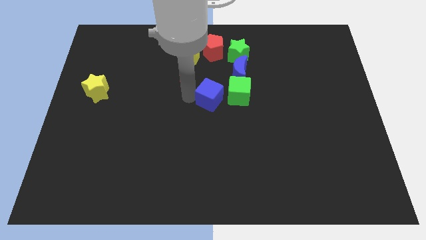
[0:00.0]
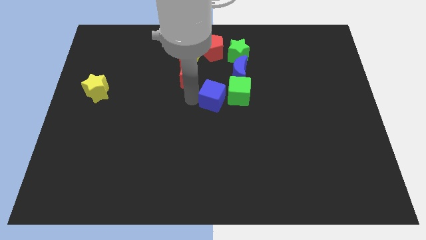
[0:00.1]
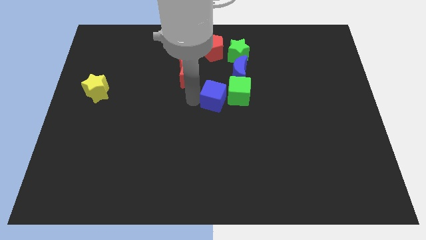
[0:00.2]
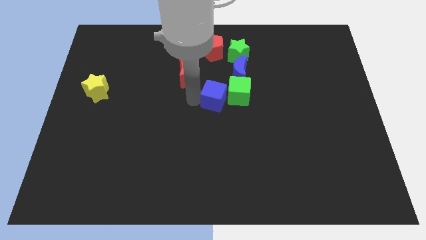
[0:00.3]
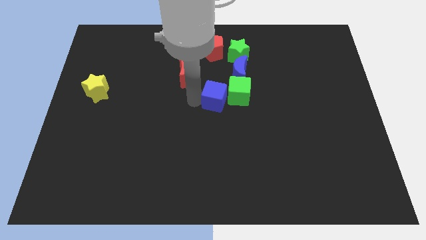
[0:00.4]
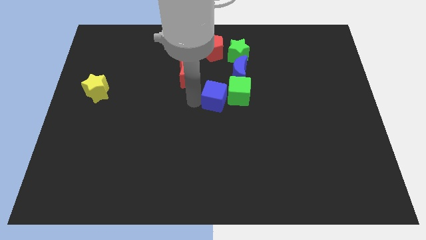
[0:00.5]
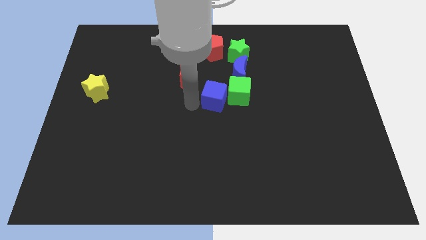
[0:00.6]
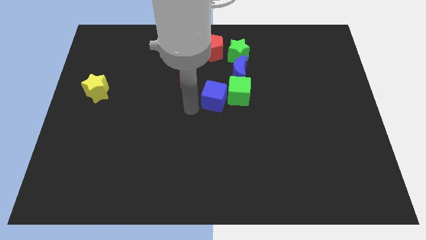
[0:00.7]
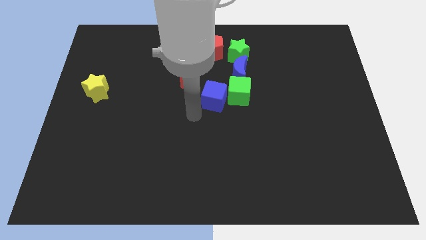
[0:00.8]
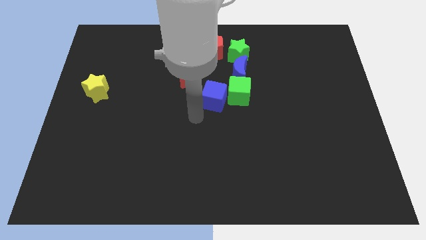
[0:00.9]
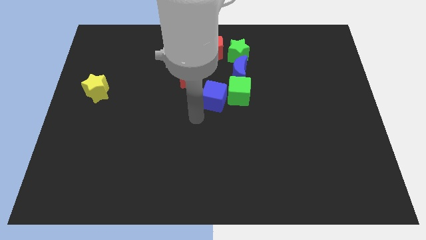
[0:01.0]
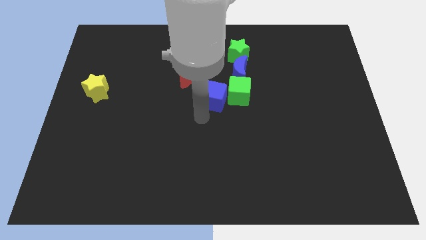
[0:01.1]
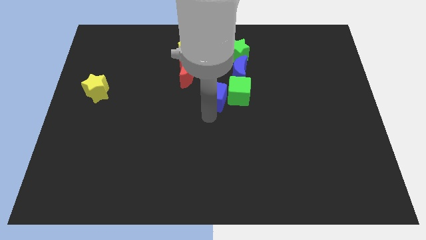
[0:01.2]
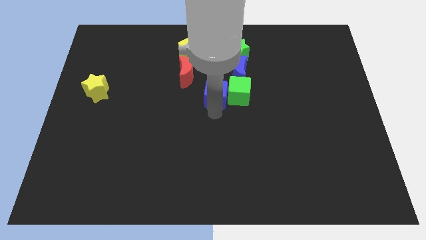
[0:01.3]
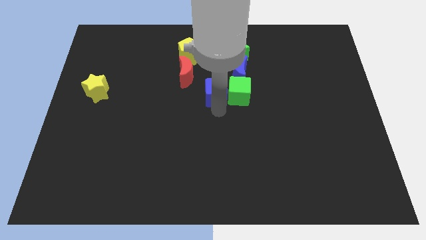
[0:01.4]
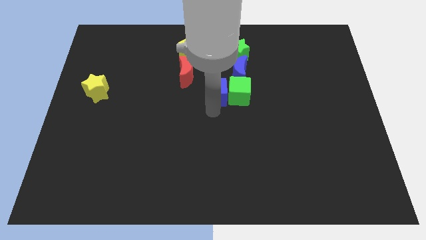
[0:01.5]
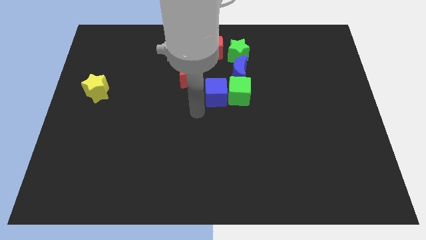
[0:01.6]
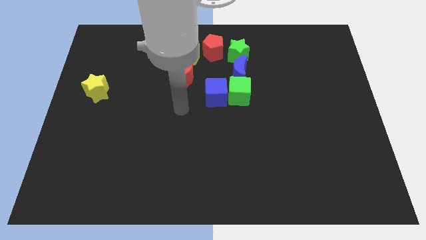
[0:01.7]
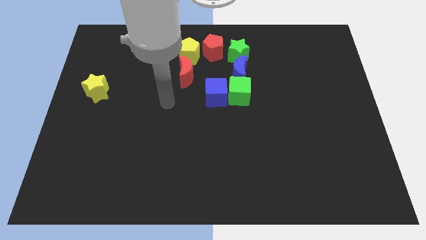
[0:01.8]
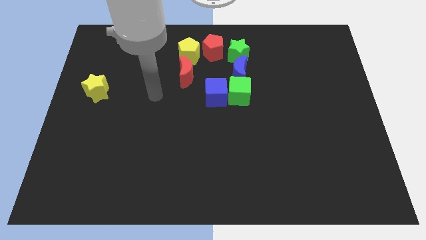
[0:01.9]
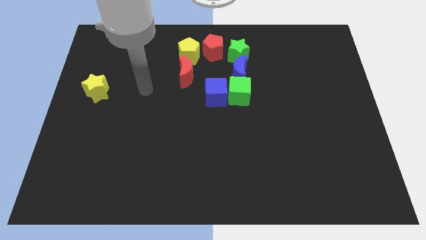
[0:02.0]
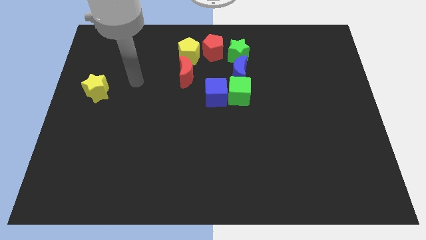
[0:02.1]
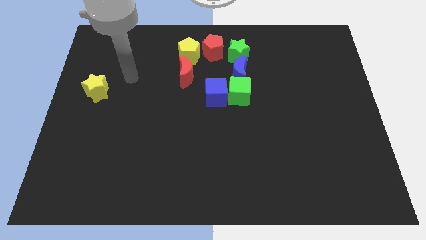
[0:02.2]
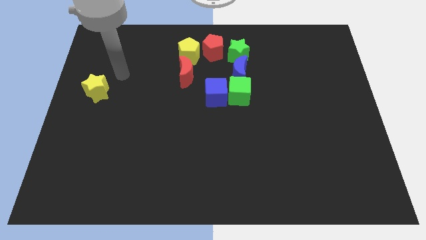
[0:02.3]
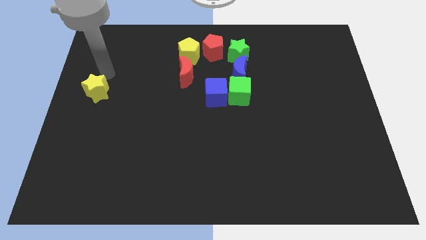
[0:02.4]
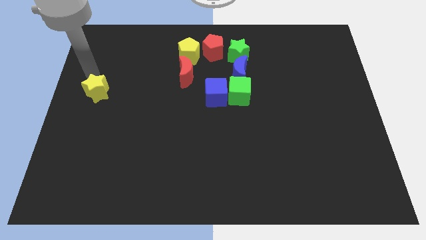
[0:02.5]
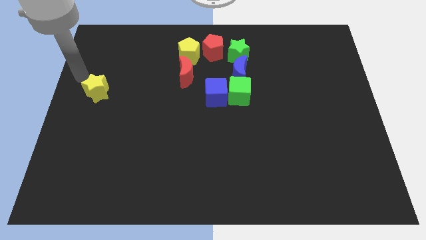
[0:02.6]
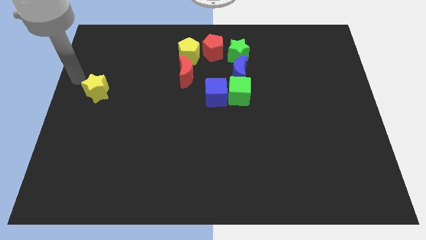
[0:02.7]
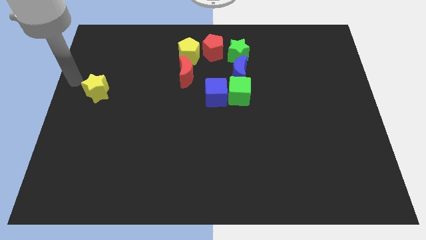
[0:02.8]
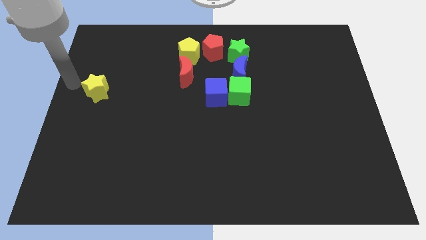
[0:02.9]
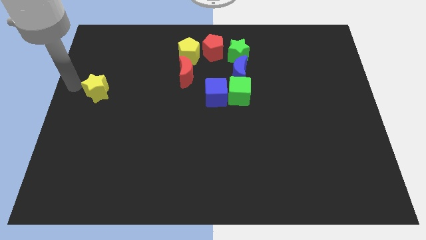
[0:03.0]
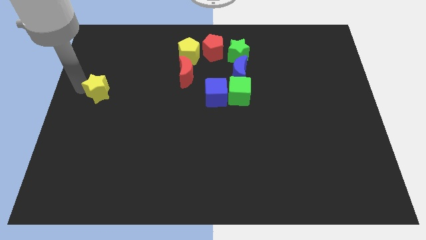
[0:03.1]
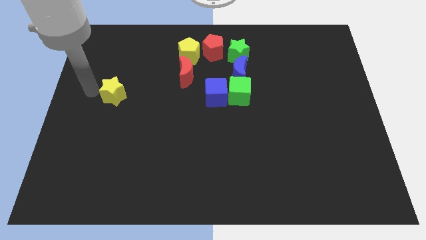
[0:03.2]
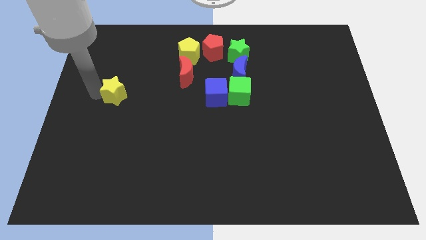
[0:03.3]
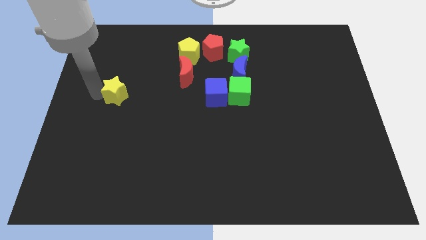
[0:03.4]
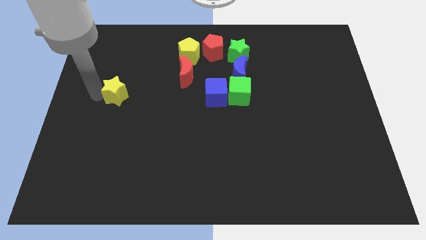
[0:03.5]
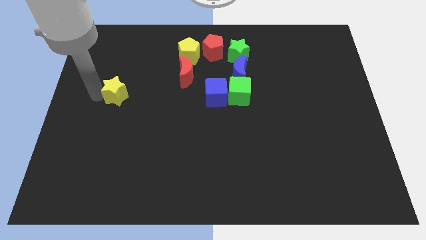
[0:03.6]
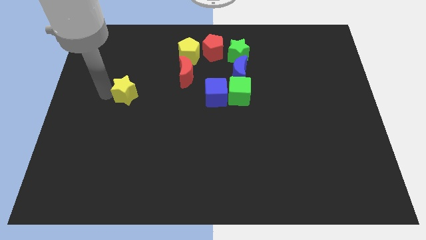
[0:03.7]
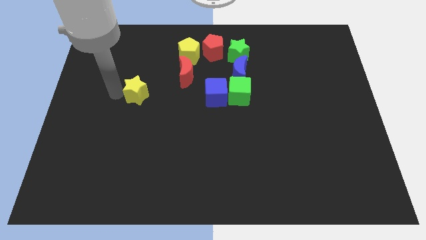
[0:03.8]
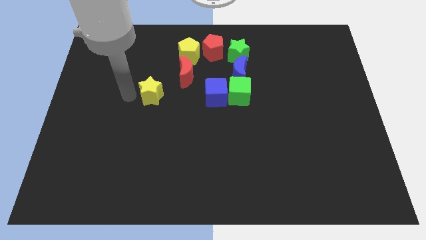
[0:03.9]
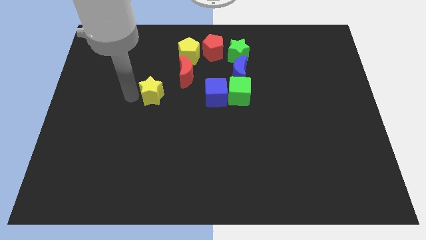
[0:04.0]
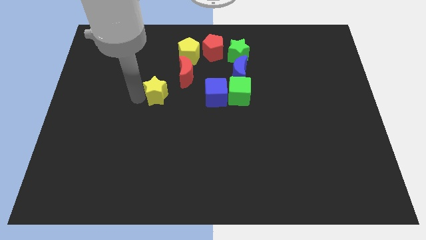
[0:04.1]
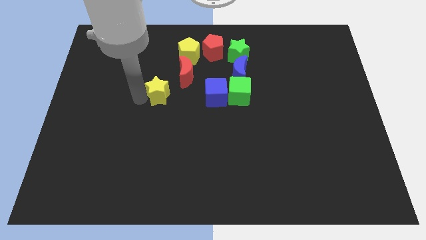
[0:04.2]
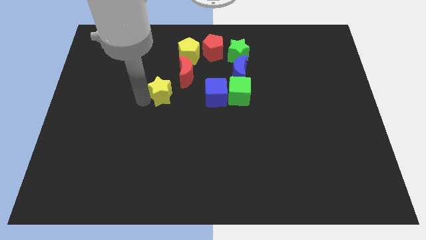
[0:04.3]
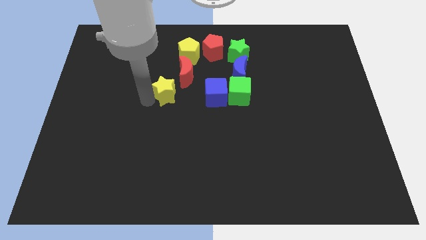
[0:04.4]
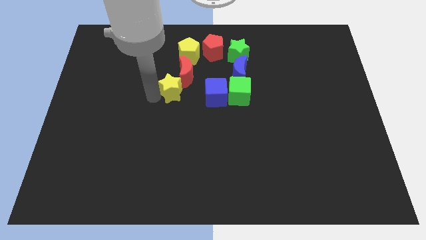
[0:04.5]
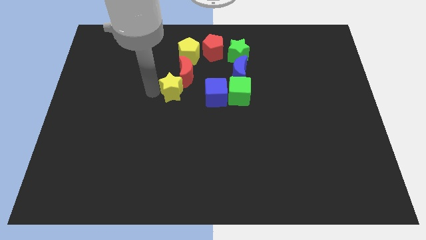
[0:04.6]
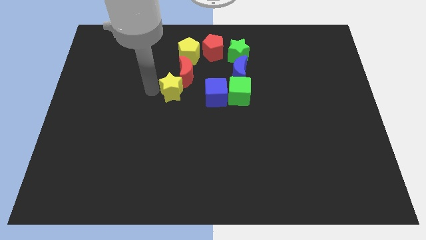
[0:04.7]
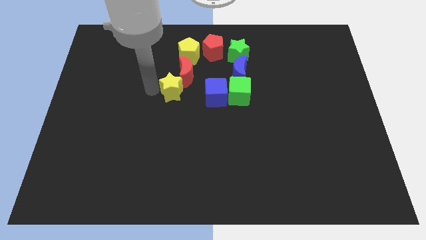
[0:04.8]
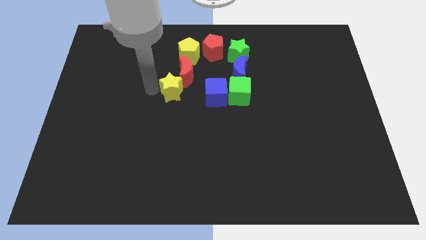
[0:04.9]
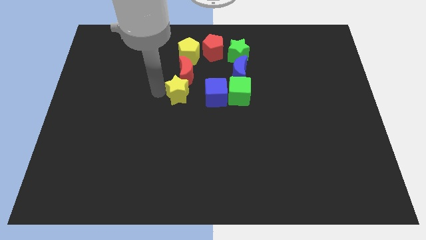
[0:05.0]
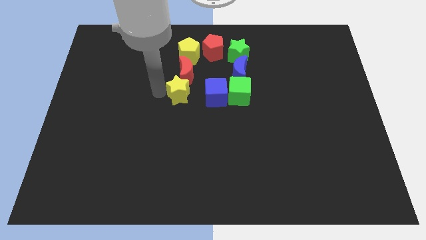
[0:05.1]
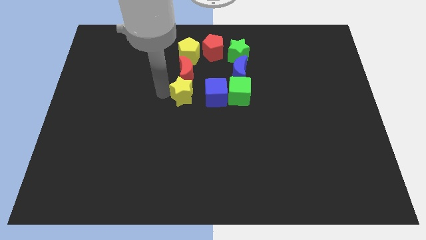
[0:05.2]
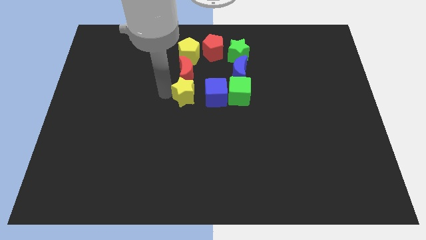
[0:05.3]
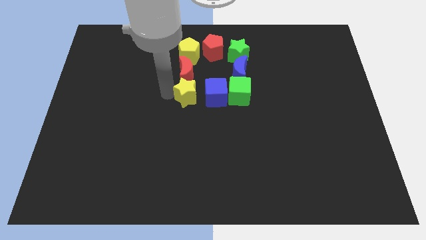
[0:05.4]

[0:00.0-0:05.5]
push the yellow star towards the blue cube

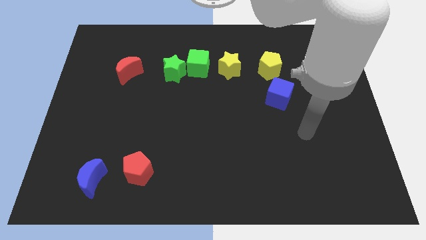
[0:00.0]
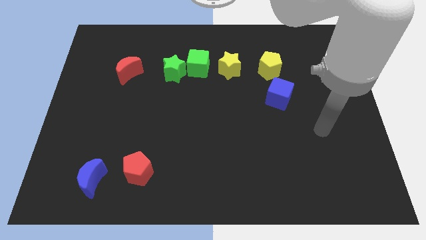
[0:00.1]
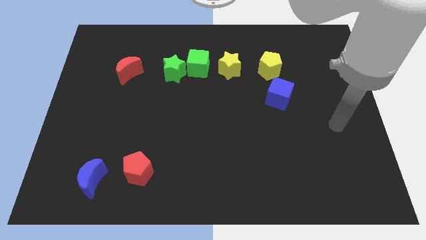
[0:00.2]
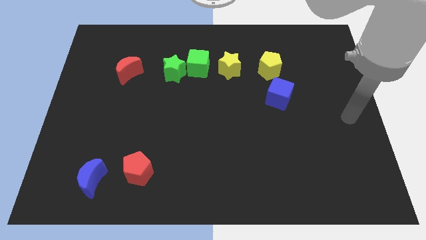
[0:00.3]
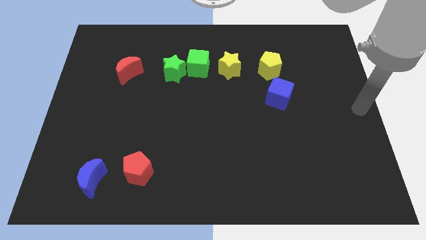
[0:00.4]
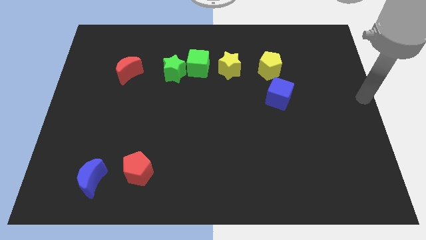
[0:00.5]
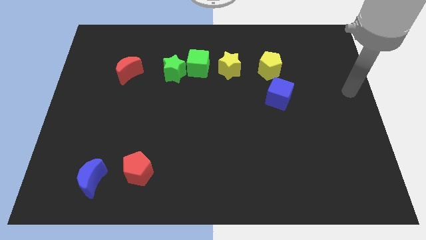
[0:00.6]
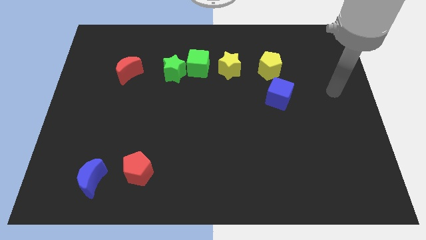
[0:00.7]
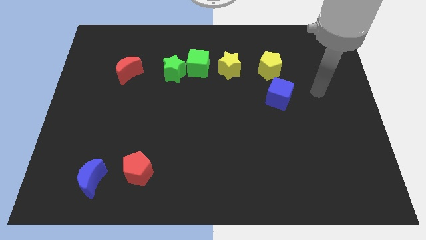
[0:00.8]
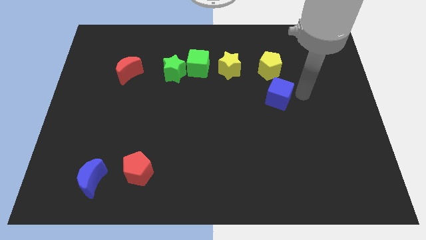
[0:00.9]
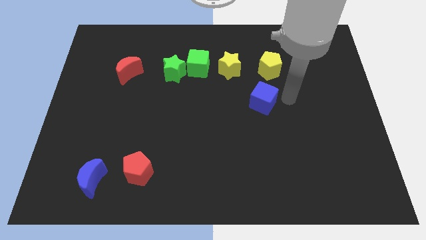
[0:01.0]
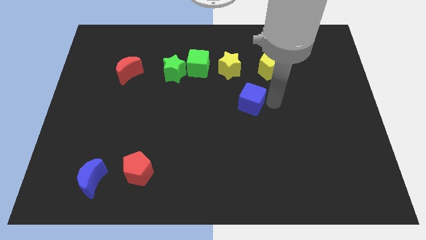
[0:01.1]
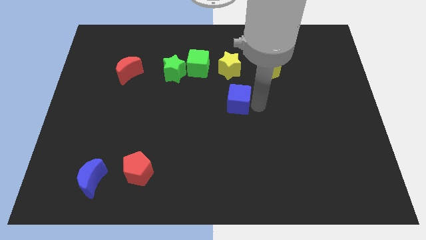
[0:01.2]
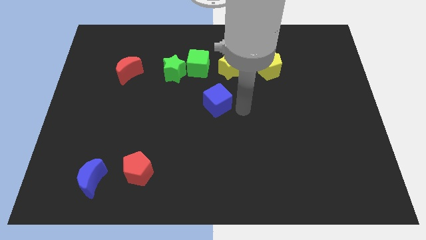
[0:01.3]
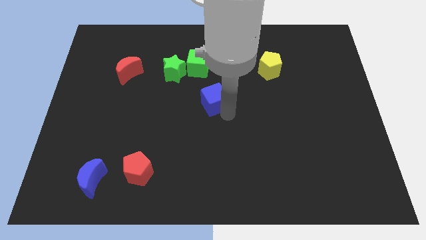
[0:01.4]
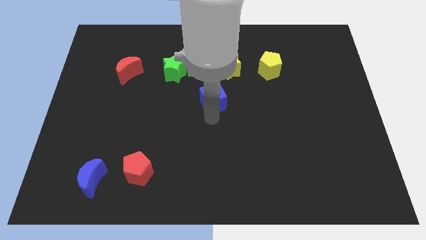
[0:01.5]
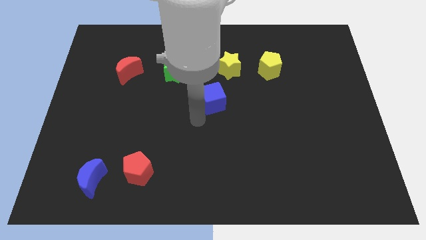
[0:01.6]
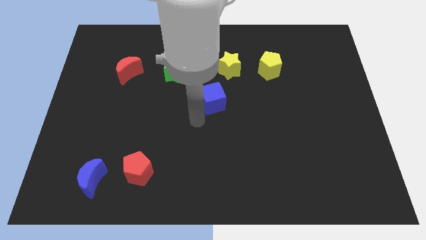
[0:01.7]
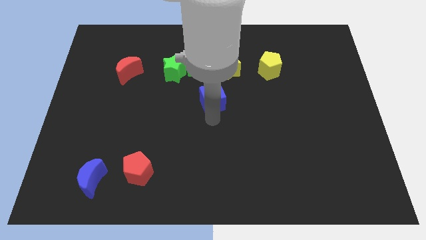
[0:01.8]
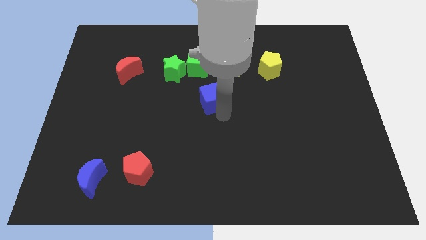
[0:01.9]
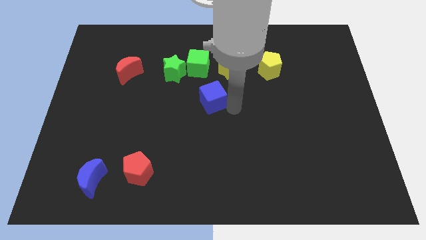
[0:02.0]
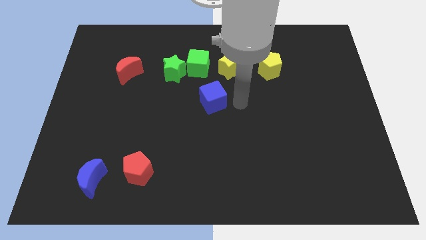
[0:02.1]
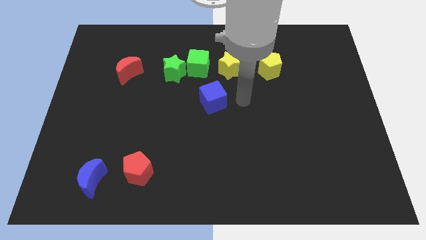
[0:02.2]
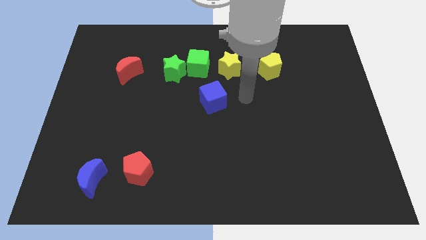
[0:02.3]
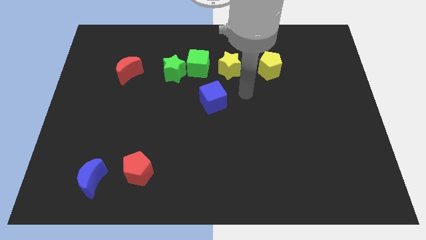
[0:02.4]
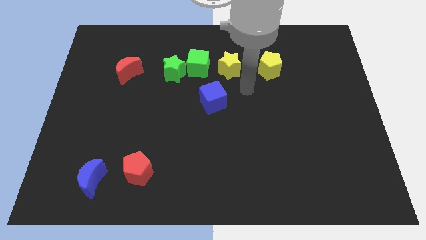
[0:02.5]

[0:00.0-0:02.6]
slide blue cube to center

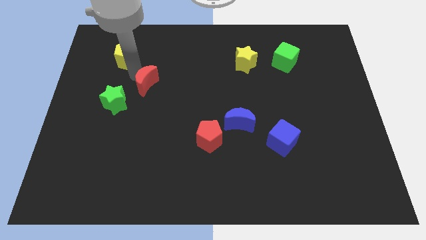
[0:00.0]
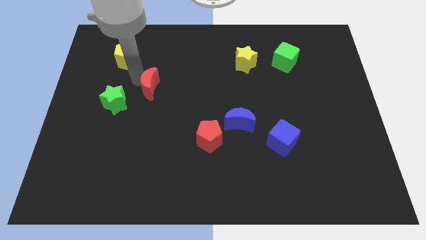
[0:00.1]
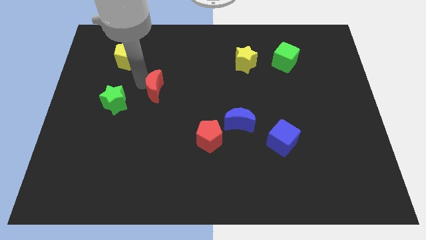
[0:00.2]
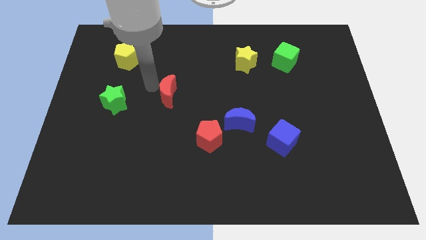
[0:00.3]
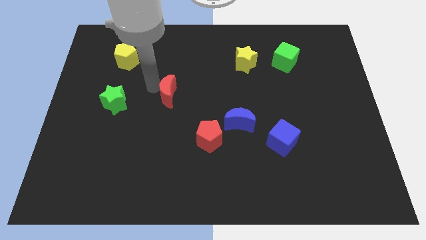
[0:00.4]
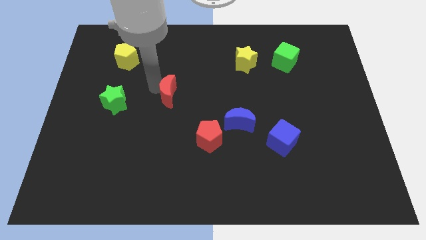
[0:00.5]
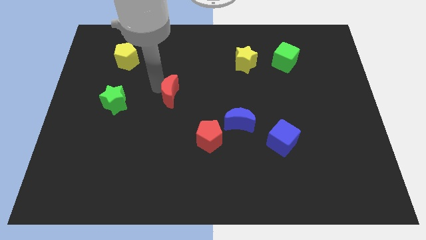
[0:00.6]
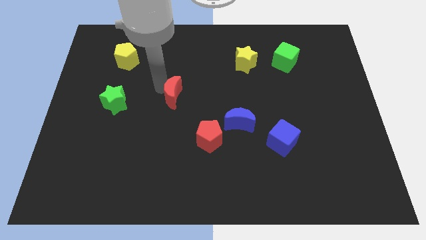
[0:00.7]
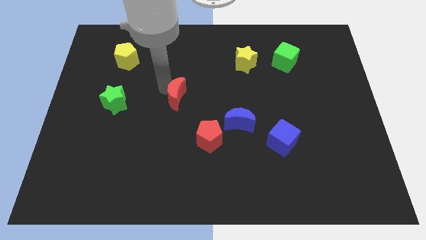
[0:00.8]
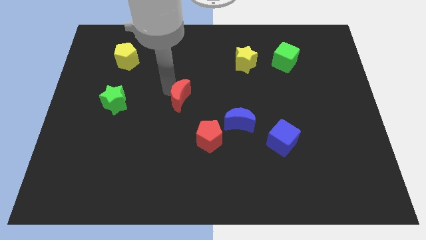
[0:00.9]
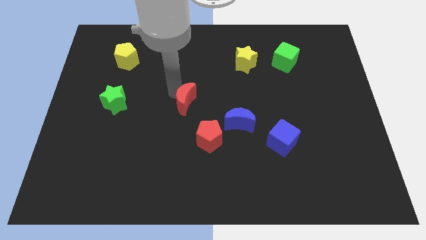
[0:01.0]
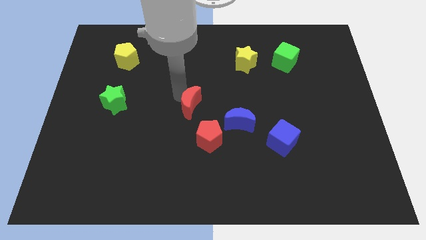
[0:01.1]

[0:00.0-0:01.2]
move red crescent towards center
